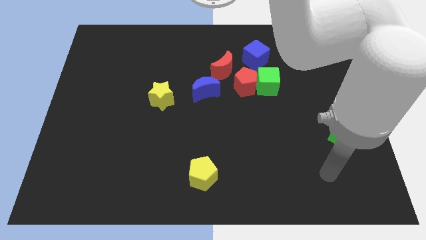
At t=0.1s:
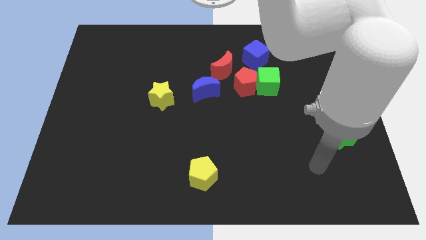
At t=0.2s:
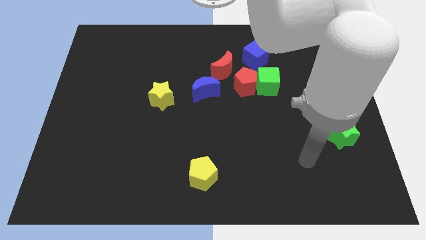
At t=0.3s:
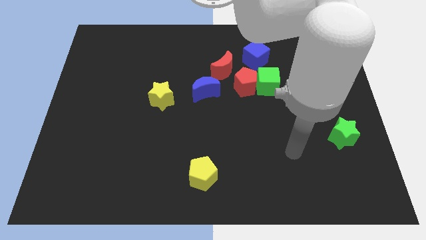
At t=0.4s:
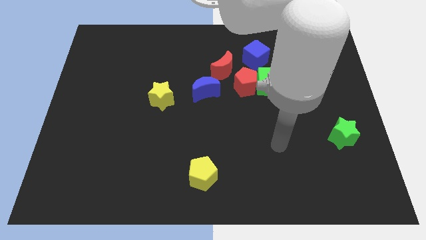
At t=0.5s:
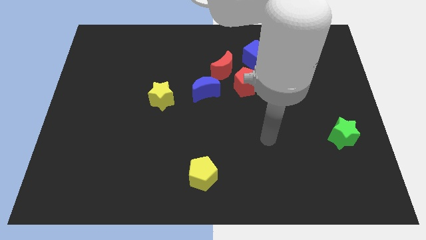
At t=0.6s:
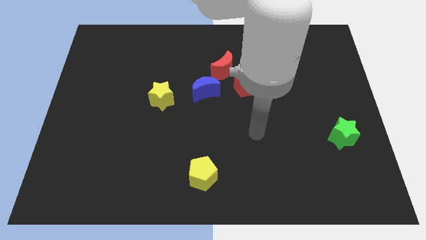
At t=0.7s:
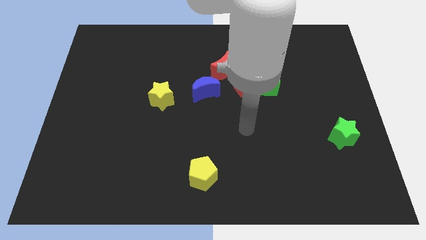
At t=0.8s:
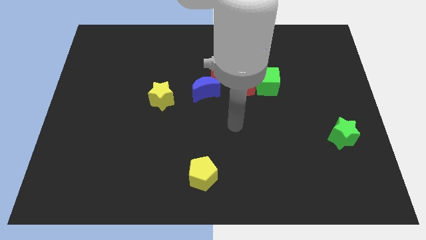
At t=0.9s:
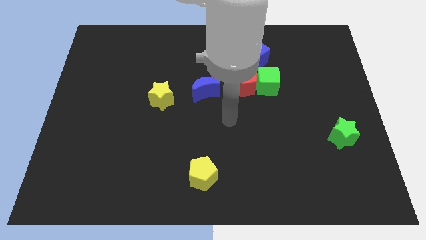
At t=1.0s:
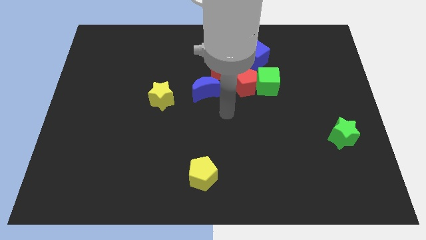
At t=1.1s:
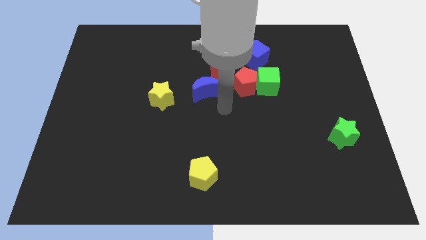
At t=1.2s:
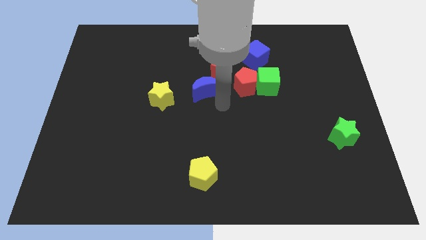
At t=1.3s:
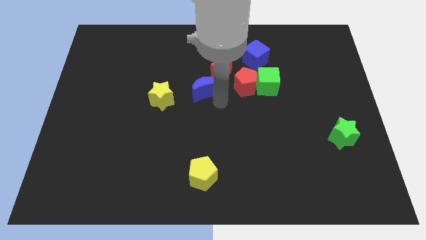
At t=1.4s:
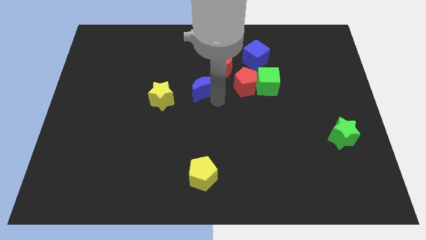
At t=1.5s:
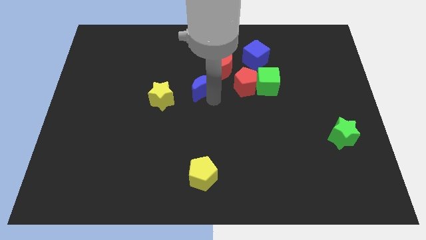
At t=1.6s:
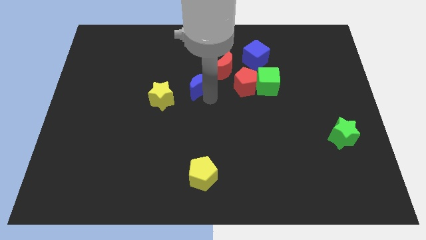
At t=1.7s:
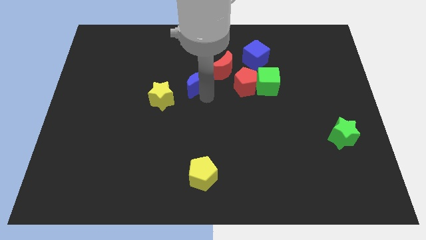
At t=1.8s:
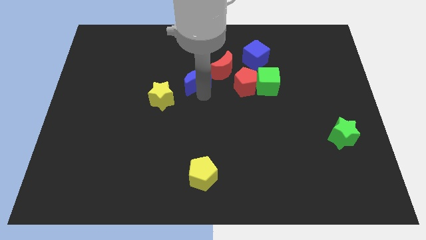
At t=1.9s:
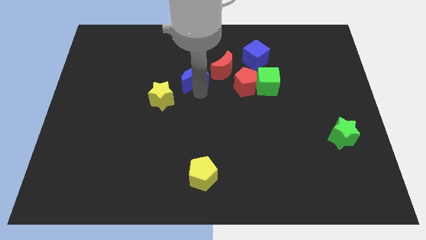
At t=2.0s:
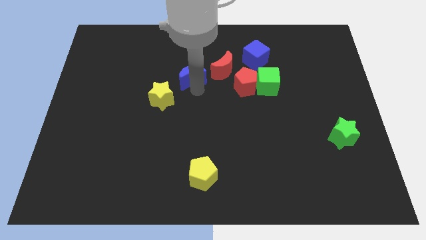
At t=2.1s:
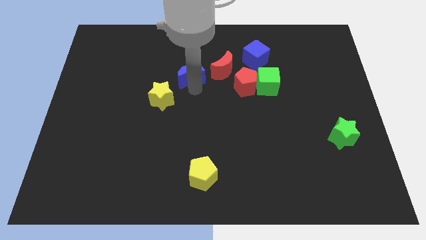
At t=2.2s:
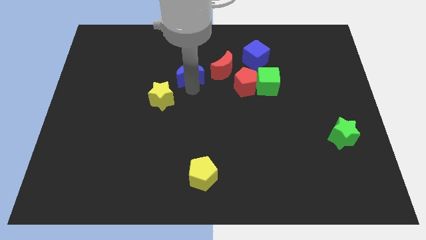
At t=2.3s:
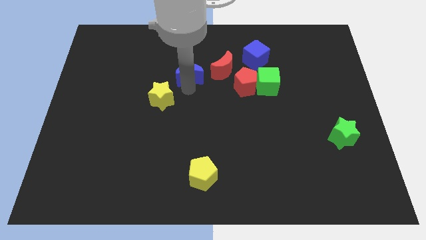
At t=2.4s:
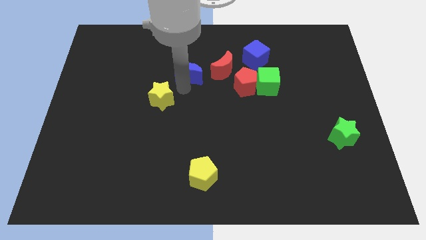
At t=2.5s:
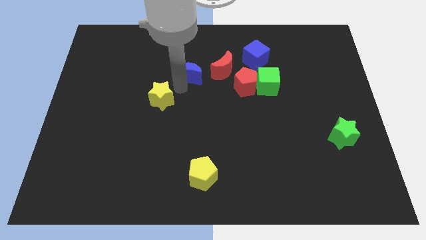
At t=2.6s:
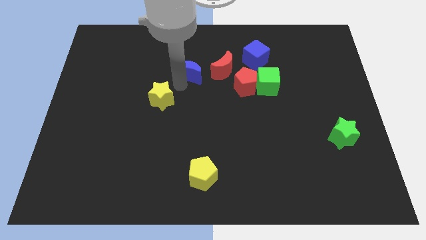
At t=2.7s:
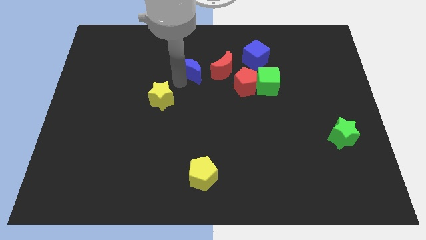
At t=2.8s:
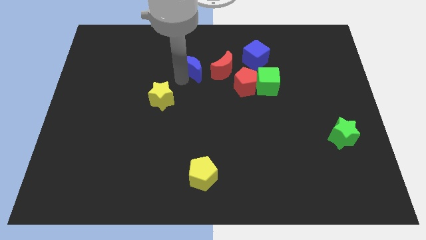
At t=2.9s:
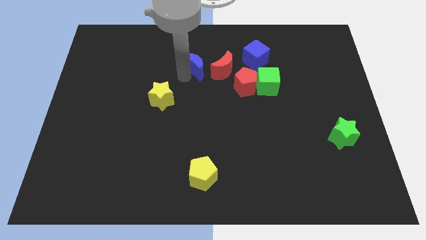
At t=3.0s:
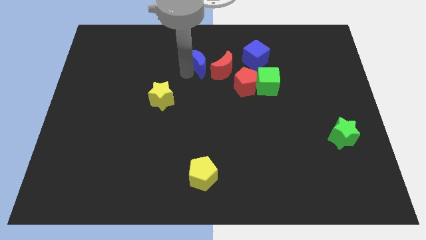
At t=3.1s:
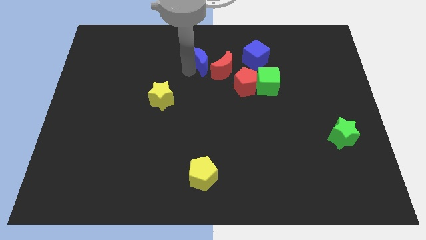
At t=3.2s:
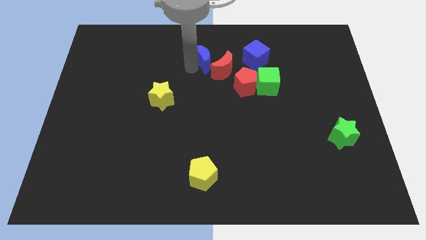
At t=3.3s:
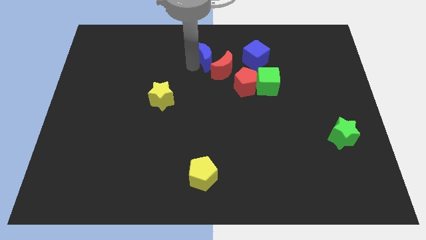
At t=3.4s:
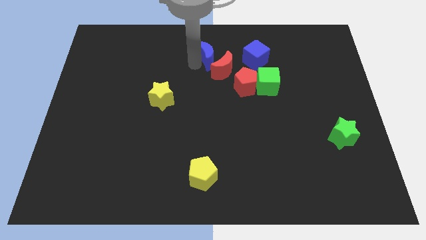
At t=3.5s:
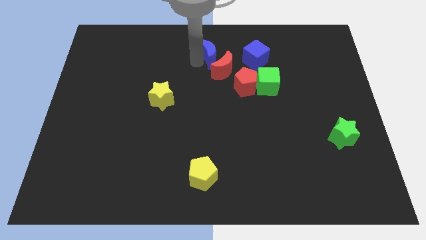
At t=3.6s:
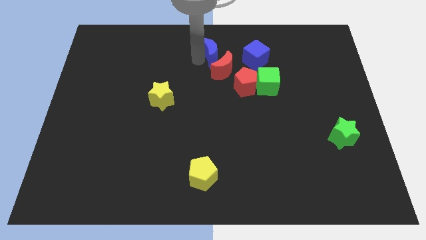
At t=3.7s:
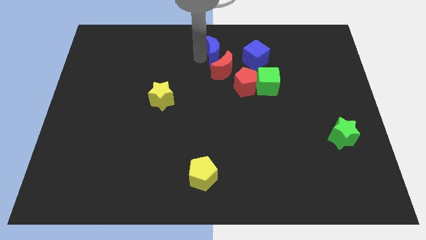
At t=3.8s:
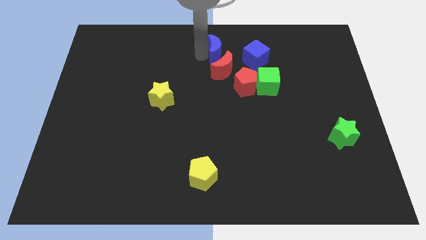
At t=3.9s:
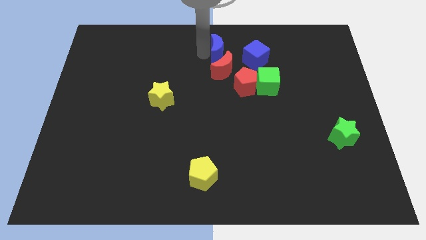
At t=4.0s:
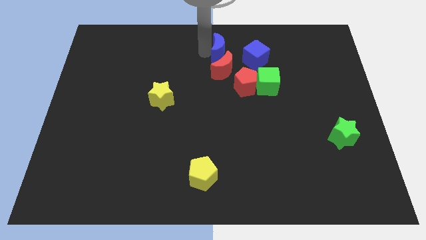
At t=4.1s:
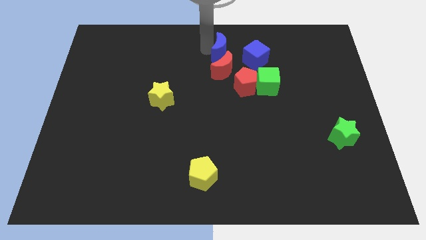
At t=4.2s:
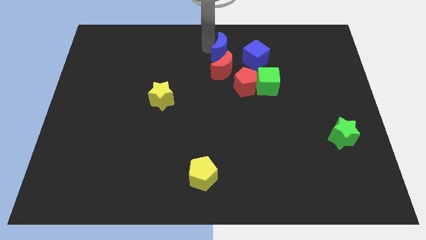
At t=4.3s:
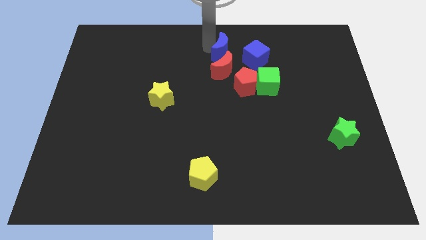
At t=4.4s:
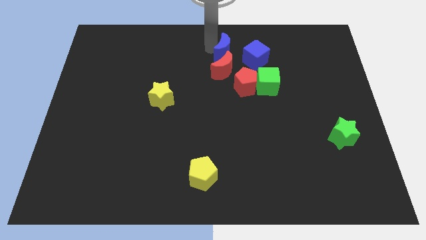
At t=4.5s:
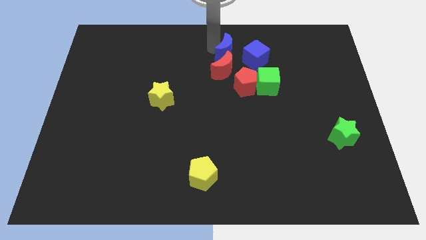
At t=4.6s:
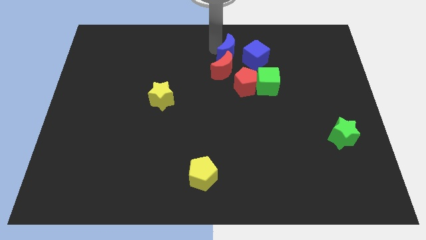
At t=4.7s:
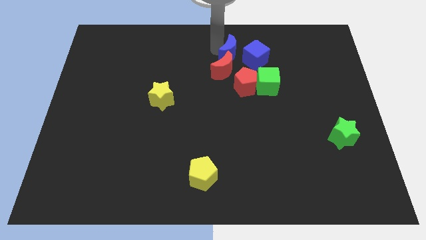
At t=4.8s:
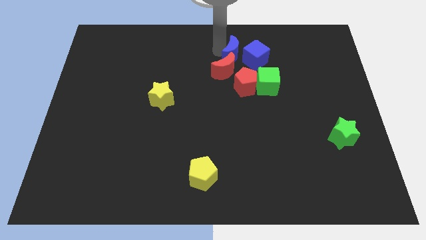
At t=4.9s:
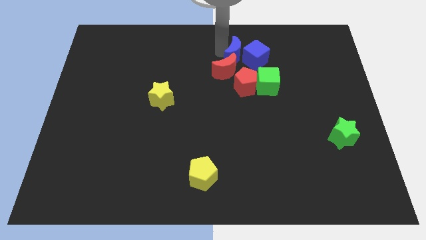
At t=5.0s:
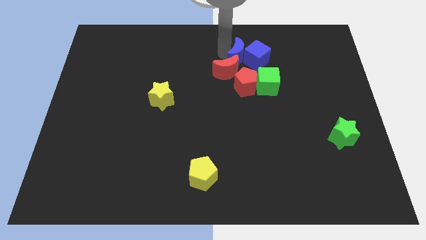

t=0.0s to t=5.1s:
push the blue moon next to the blue cube

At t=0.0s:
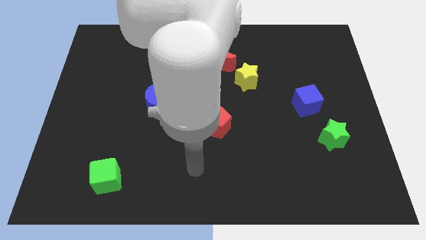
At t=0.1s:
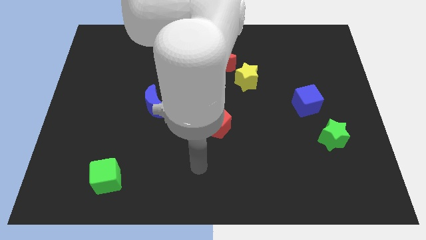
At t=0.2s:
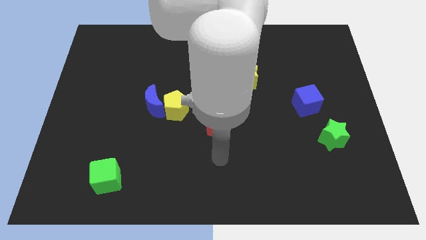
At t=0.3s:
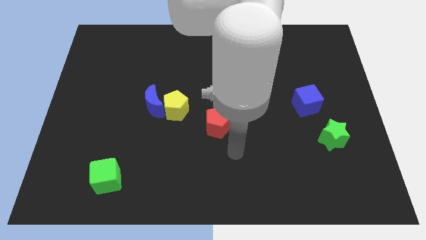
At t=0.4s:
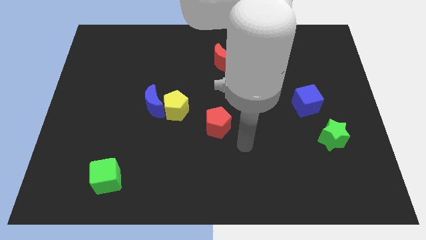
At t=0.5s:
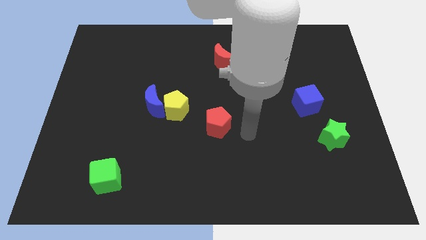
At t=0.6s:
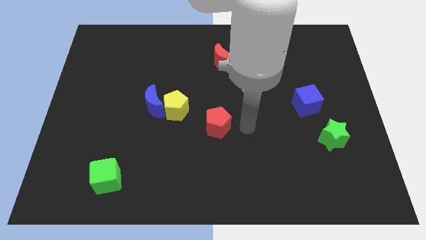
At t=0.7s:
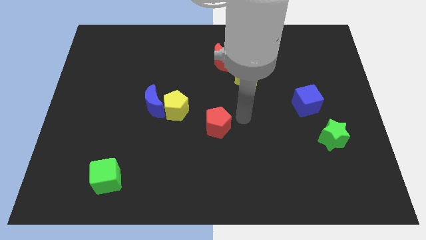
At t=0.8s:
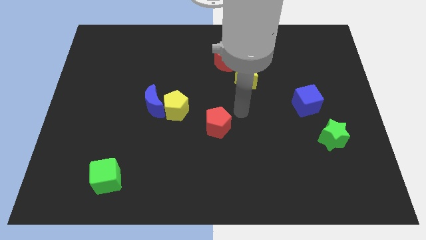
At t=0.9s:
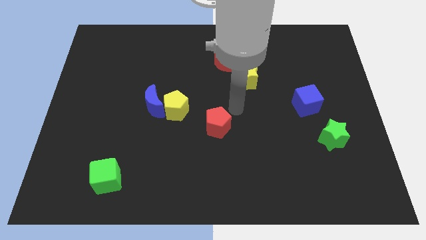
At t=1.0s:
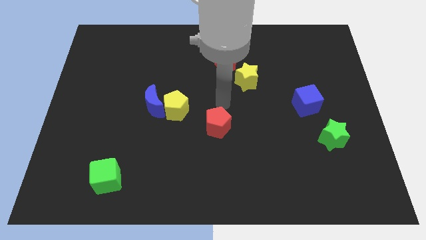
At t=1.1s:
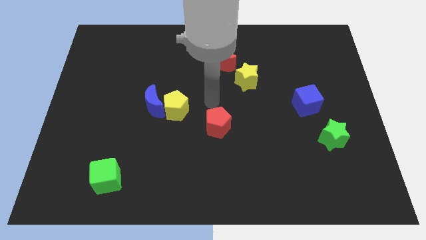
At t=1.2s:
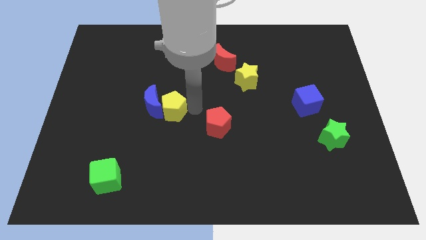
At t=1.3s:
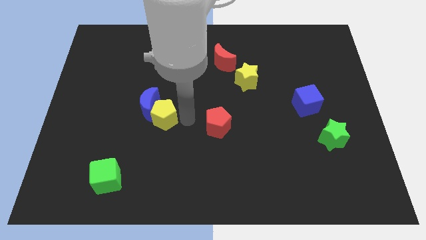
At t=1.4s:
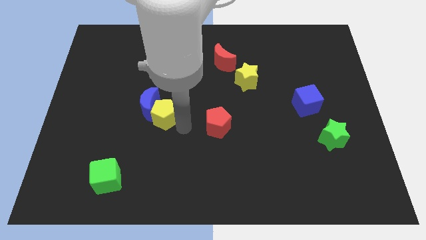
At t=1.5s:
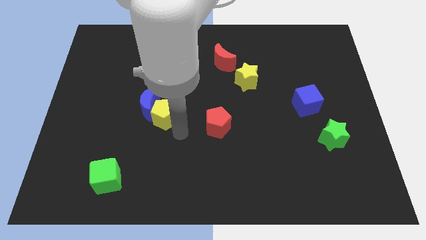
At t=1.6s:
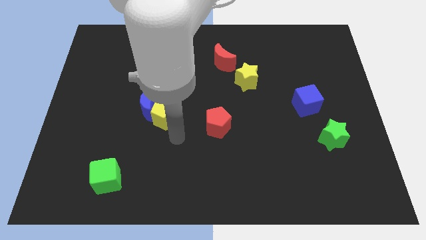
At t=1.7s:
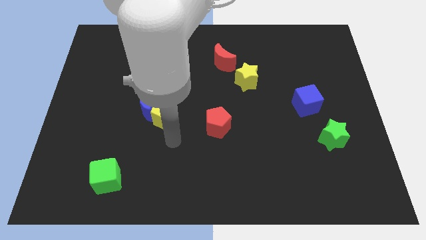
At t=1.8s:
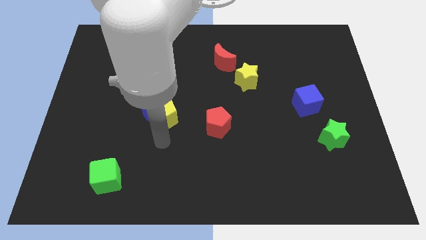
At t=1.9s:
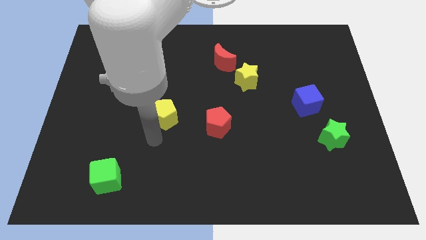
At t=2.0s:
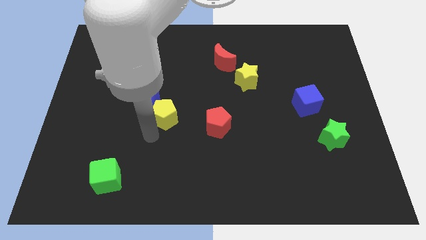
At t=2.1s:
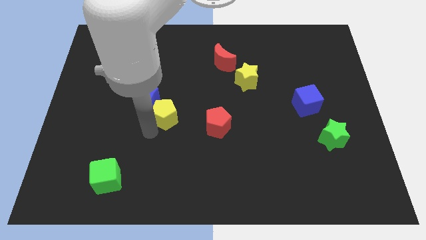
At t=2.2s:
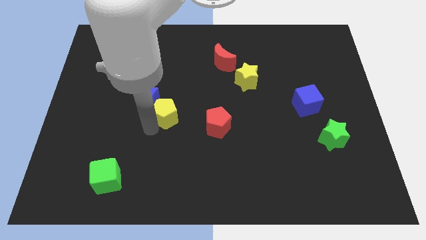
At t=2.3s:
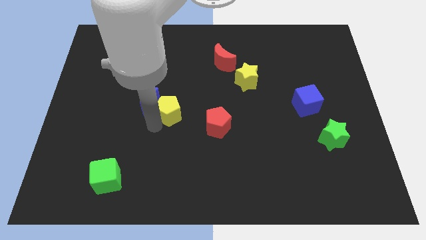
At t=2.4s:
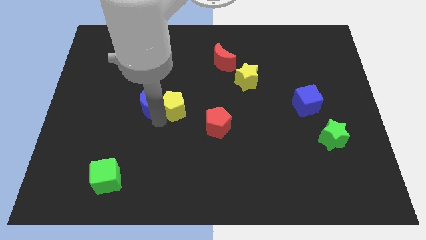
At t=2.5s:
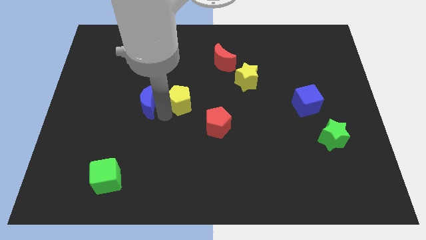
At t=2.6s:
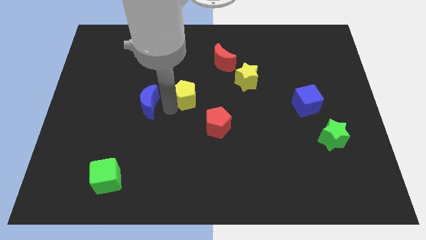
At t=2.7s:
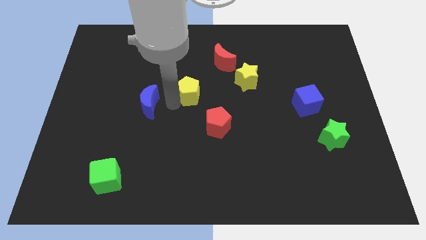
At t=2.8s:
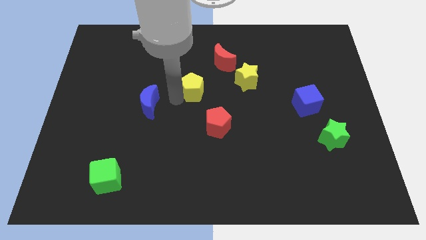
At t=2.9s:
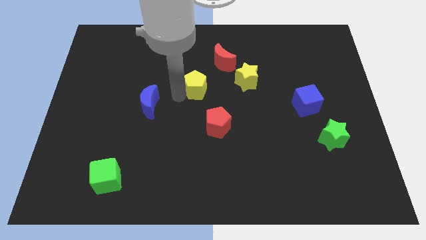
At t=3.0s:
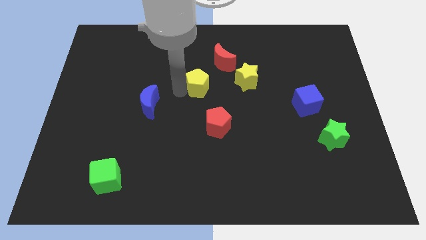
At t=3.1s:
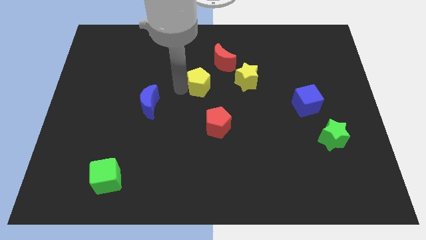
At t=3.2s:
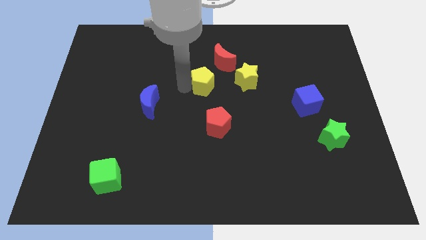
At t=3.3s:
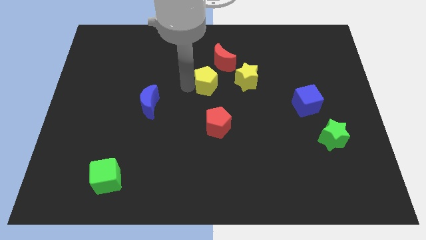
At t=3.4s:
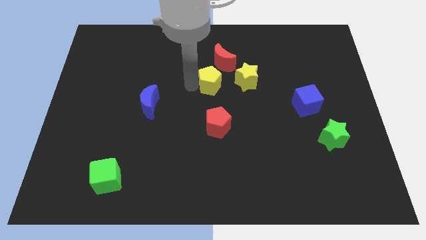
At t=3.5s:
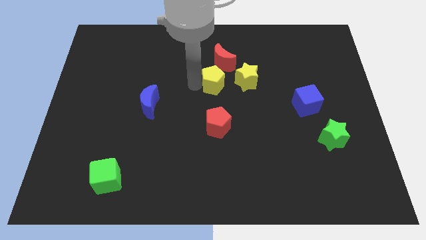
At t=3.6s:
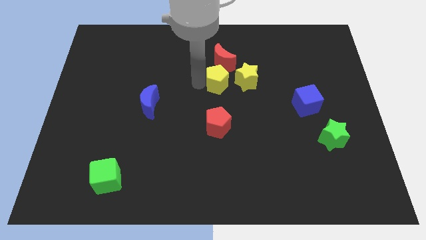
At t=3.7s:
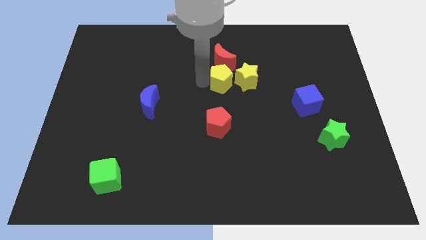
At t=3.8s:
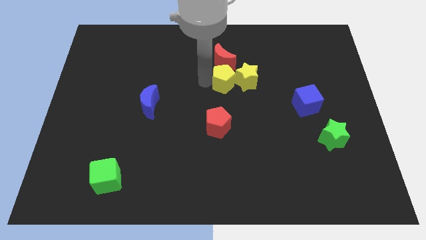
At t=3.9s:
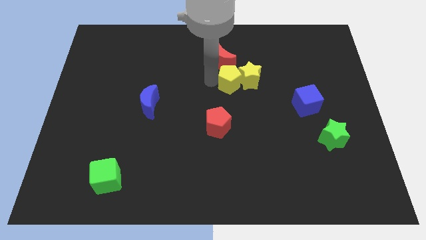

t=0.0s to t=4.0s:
move the yellow pentagon close to the yellow star
